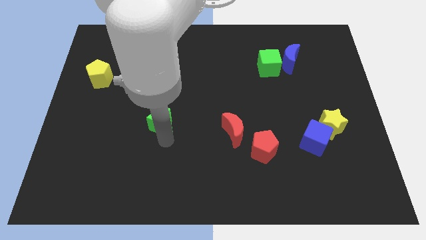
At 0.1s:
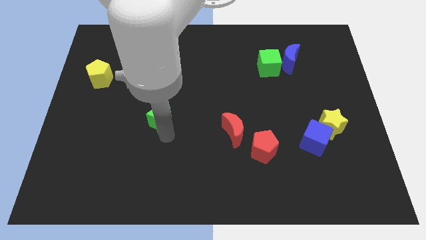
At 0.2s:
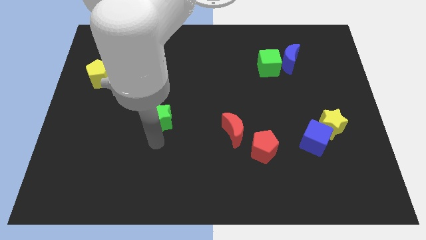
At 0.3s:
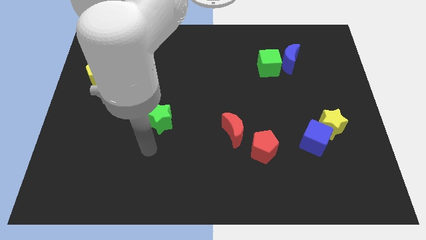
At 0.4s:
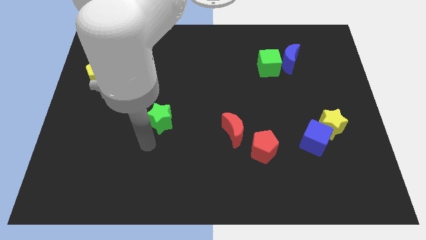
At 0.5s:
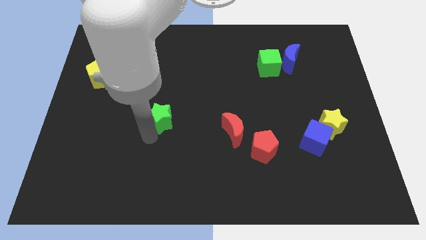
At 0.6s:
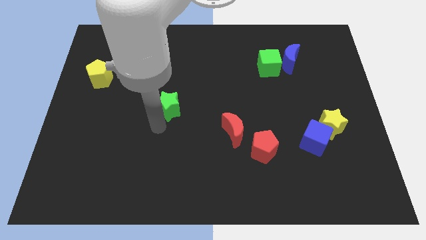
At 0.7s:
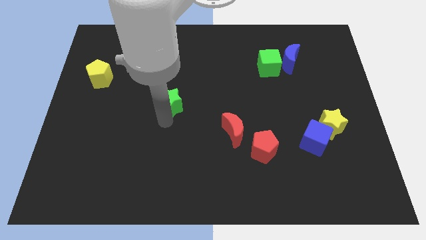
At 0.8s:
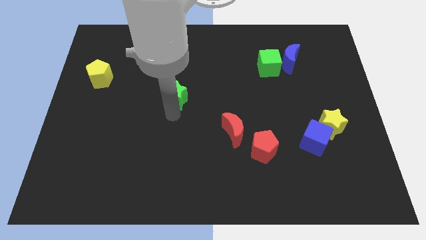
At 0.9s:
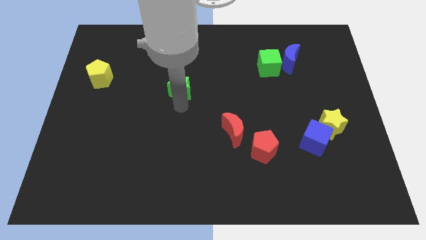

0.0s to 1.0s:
move green star slightly up

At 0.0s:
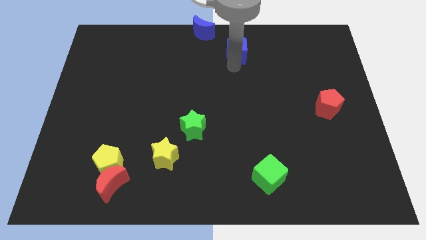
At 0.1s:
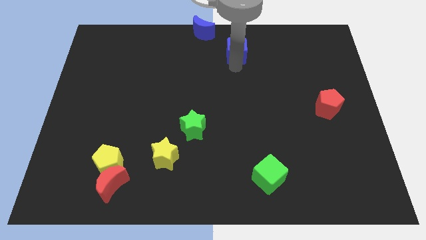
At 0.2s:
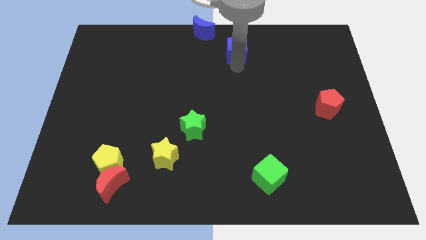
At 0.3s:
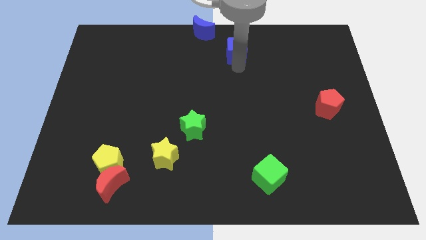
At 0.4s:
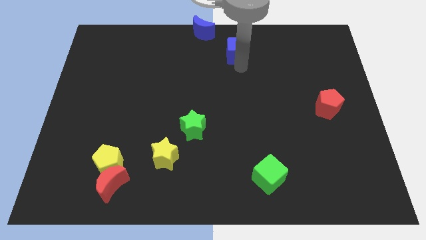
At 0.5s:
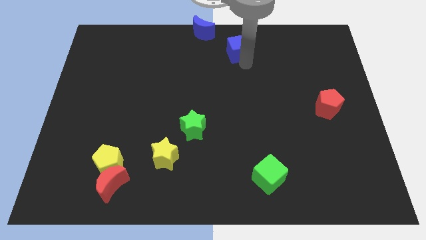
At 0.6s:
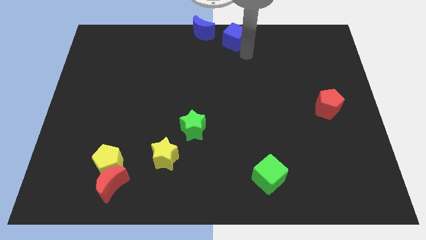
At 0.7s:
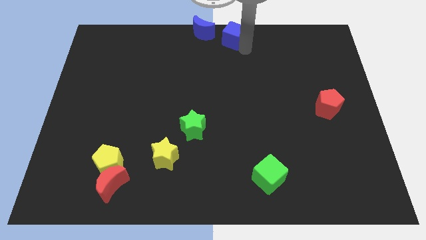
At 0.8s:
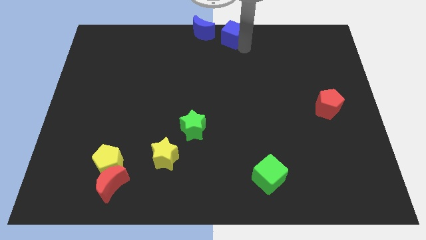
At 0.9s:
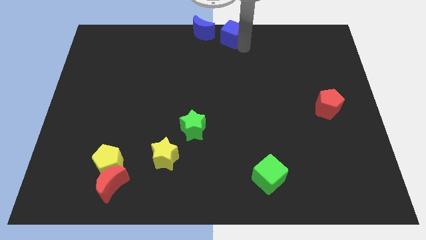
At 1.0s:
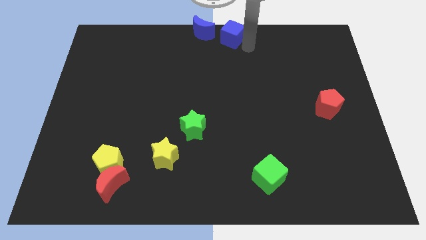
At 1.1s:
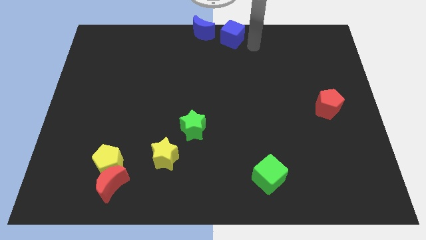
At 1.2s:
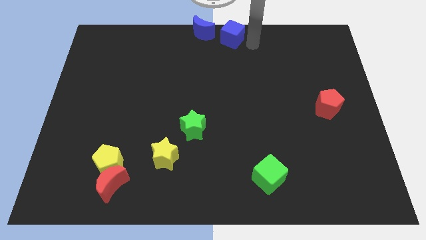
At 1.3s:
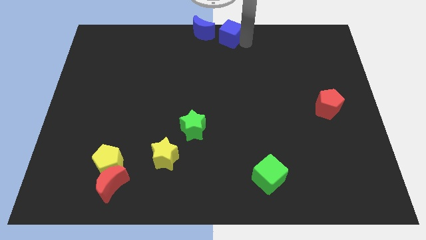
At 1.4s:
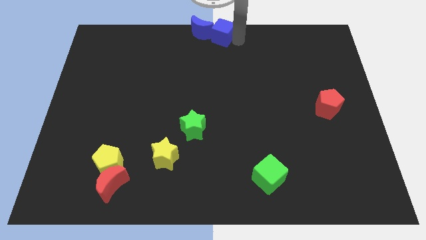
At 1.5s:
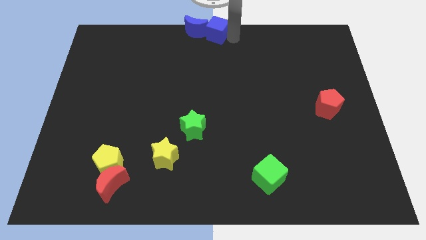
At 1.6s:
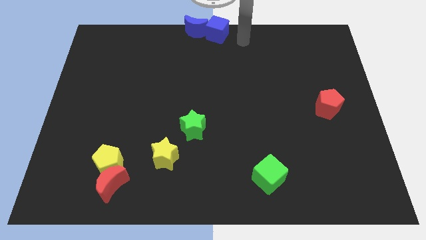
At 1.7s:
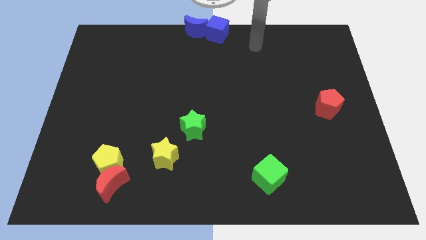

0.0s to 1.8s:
move the blue cube into the blue moon

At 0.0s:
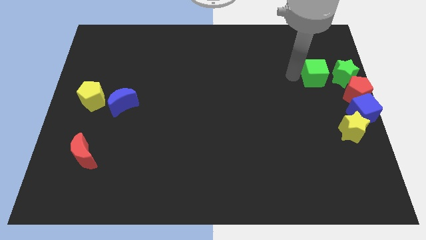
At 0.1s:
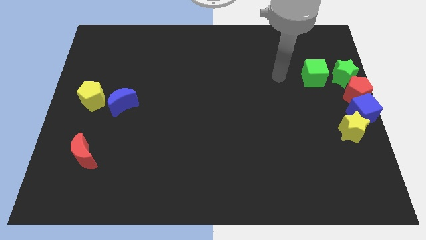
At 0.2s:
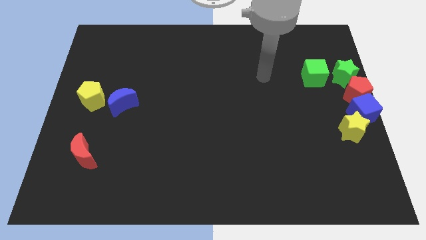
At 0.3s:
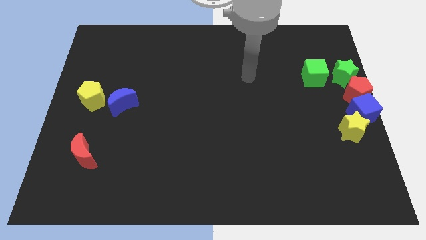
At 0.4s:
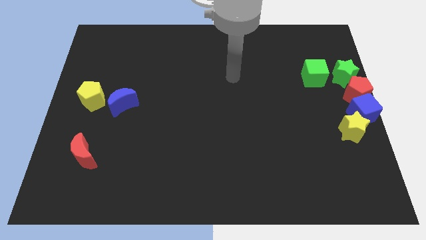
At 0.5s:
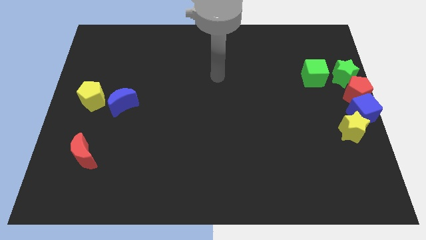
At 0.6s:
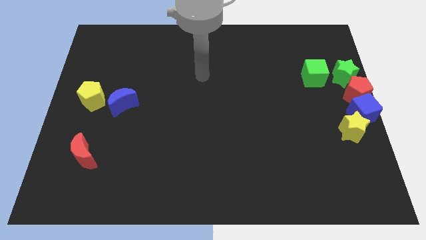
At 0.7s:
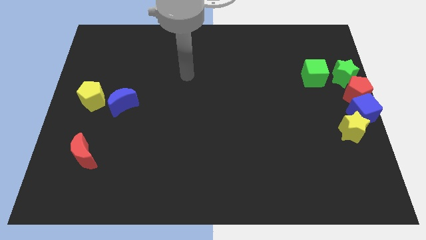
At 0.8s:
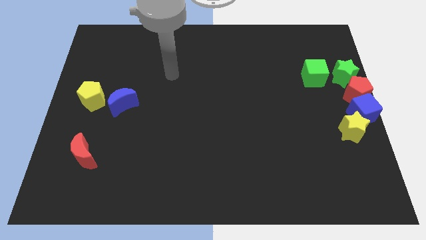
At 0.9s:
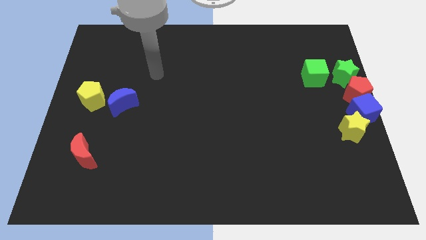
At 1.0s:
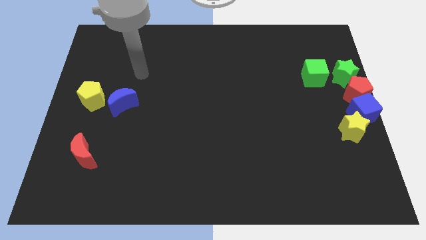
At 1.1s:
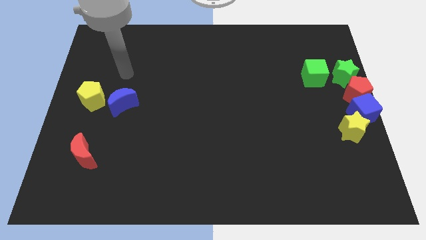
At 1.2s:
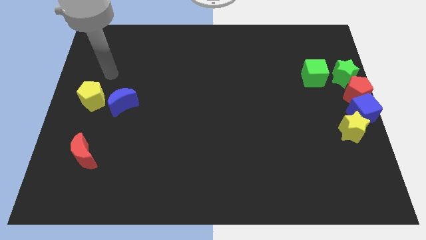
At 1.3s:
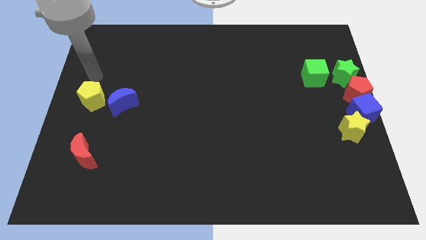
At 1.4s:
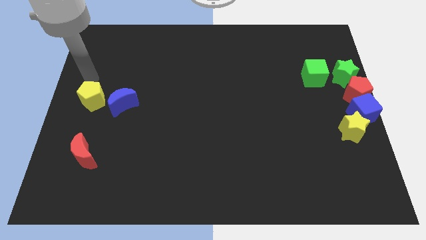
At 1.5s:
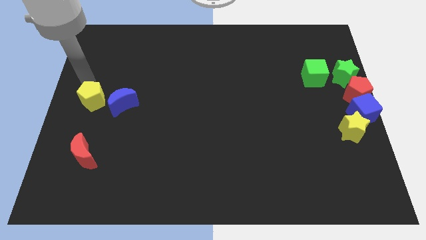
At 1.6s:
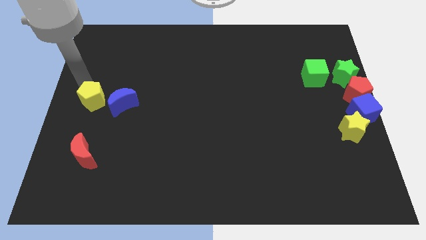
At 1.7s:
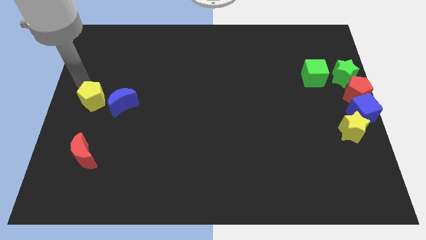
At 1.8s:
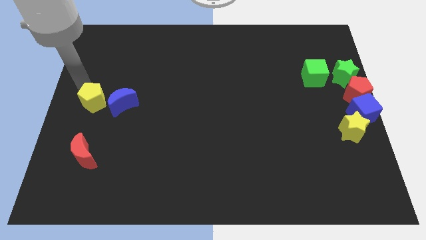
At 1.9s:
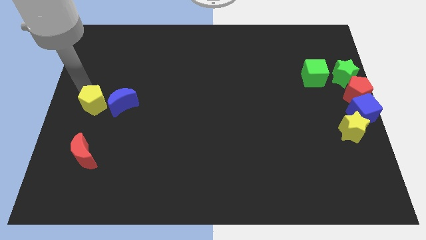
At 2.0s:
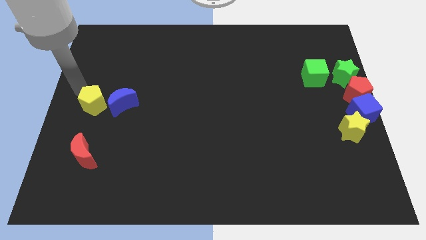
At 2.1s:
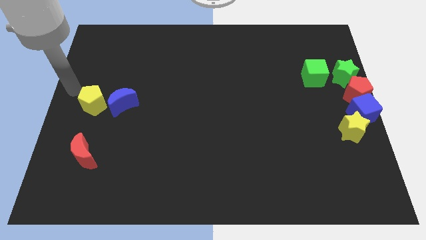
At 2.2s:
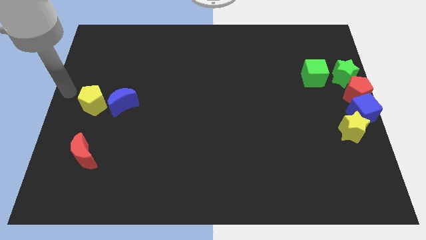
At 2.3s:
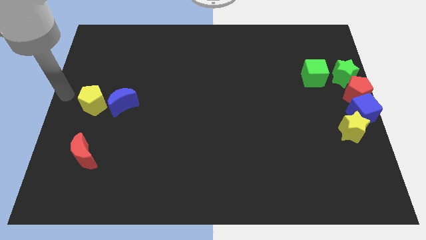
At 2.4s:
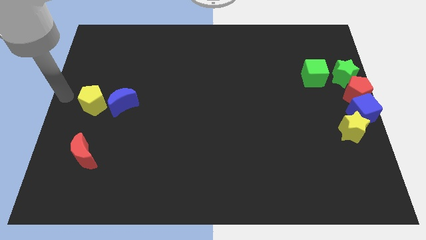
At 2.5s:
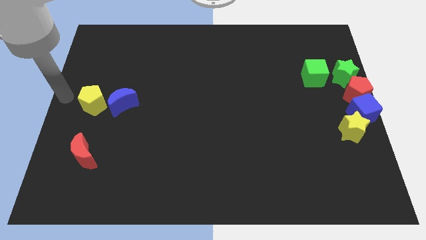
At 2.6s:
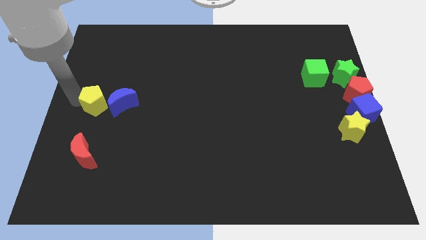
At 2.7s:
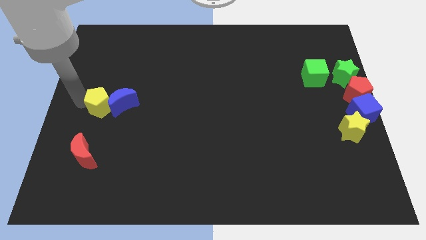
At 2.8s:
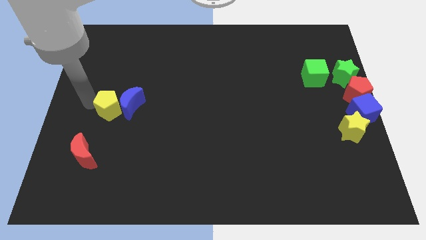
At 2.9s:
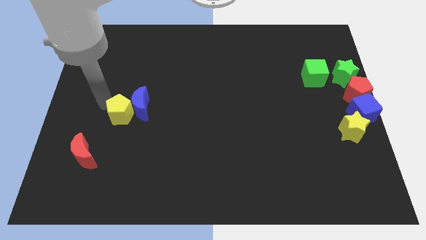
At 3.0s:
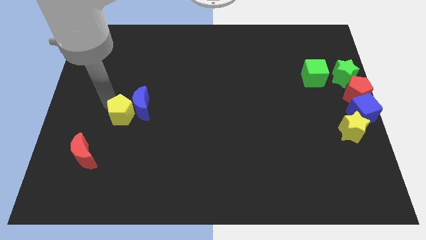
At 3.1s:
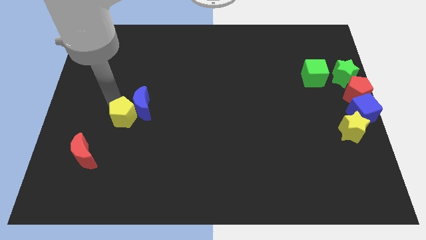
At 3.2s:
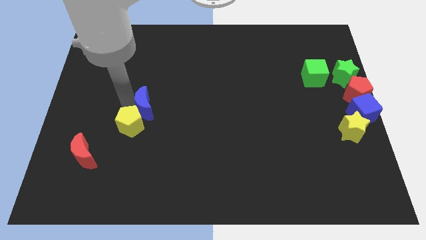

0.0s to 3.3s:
move the yellow pentagon into the blue crescent

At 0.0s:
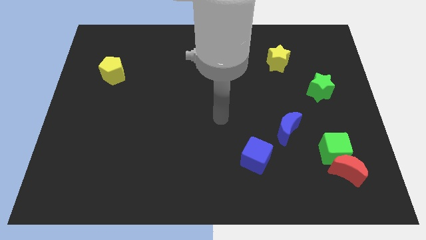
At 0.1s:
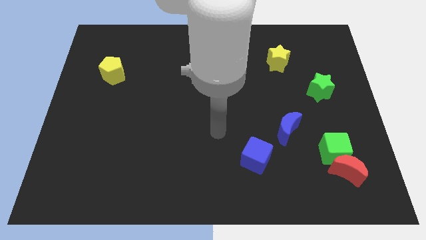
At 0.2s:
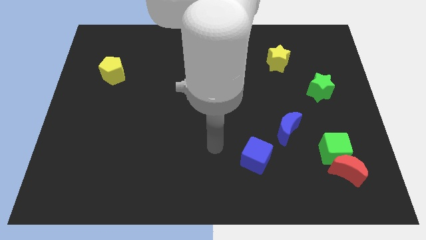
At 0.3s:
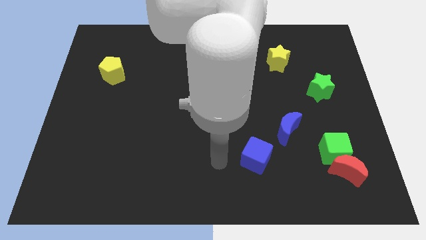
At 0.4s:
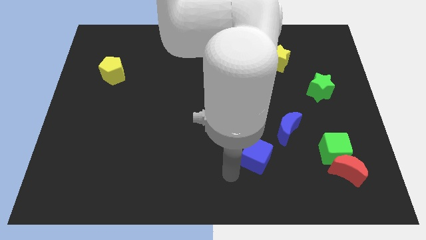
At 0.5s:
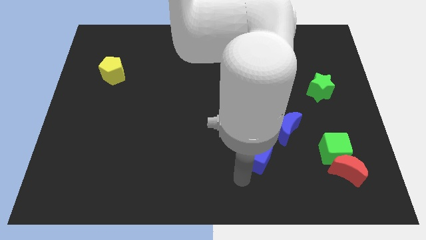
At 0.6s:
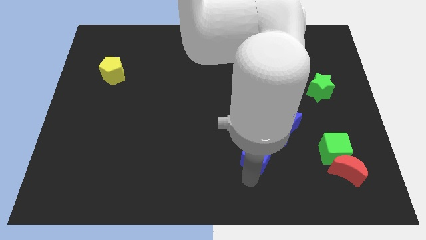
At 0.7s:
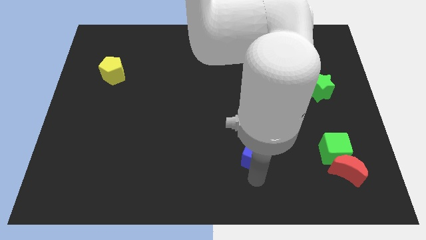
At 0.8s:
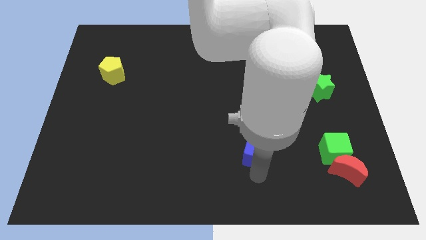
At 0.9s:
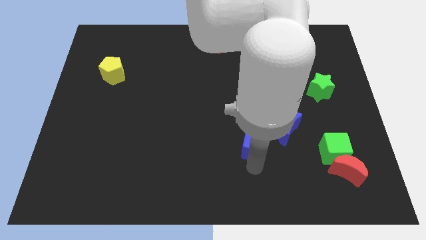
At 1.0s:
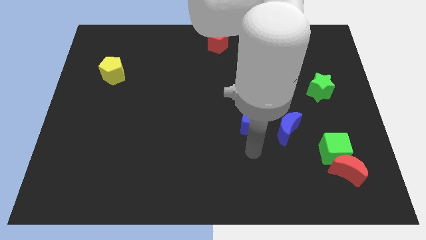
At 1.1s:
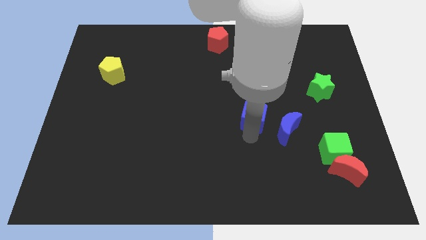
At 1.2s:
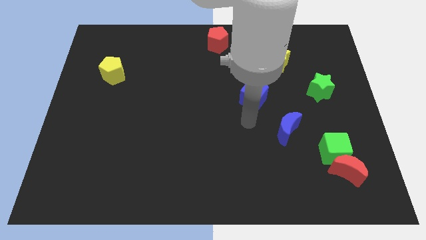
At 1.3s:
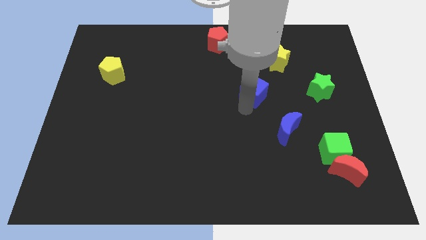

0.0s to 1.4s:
move the blue cube up slightly

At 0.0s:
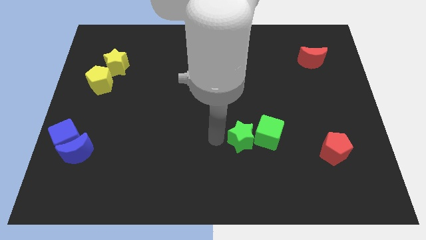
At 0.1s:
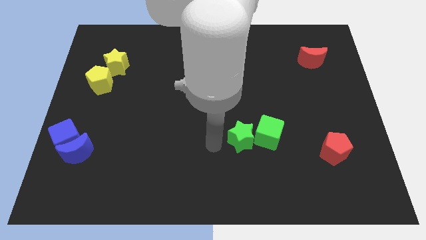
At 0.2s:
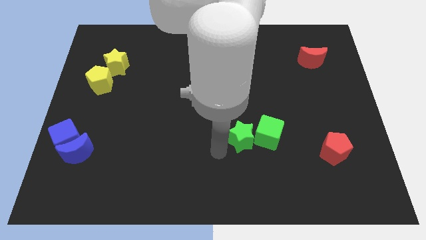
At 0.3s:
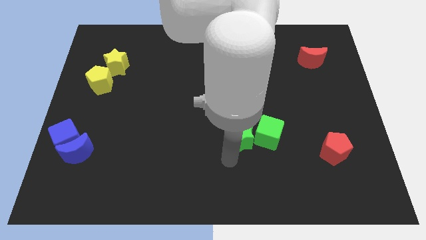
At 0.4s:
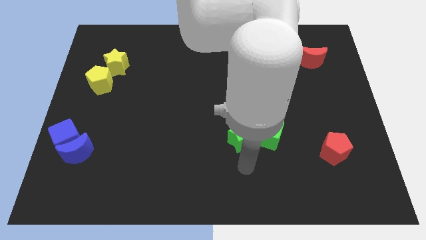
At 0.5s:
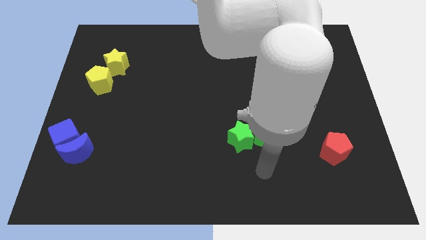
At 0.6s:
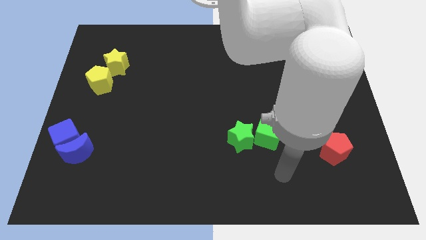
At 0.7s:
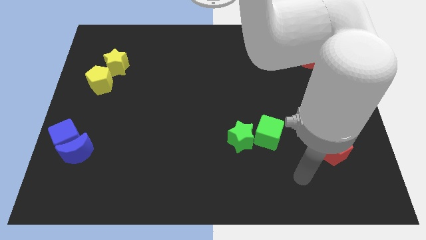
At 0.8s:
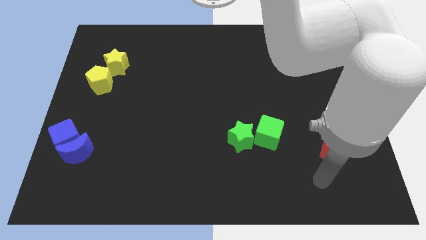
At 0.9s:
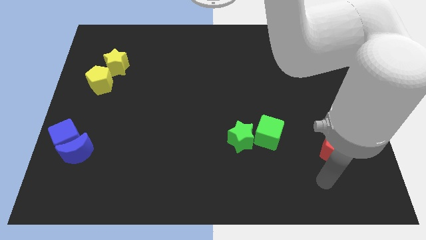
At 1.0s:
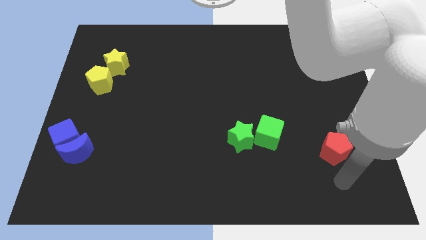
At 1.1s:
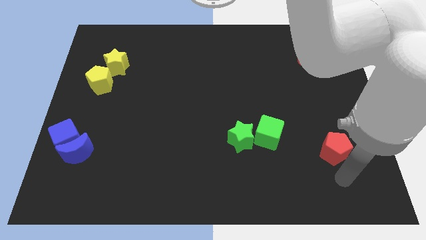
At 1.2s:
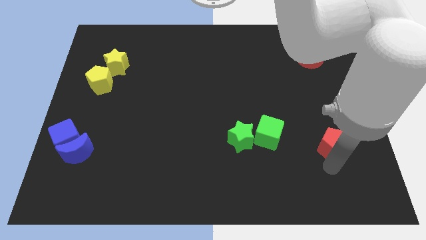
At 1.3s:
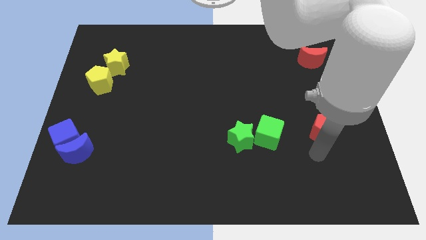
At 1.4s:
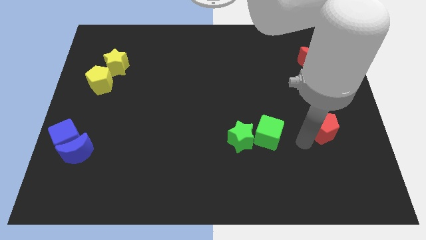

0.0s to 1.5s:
slightly push the red pentagon upwards
